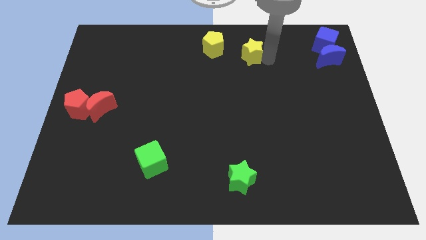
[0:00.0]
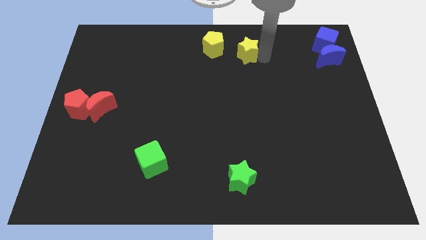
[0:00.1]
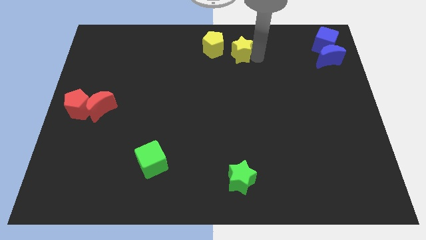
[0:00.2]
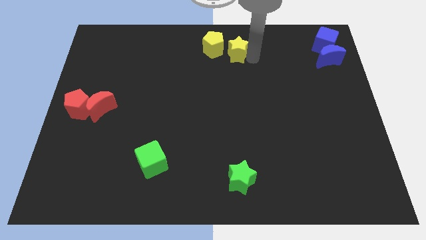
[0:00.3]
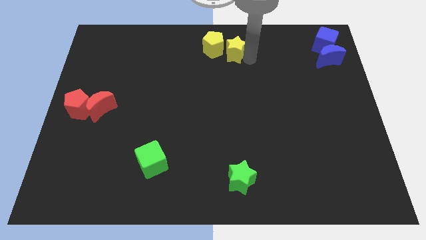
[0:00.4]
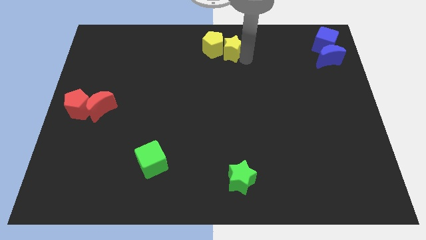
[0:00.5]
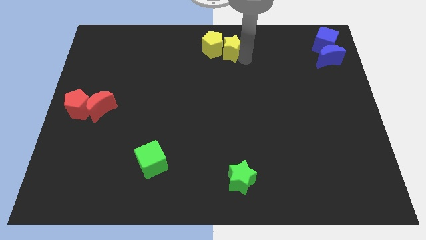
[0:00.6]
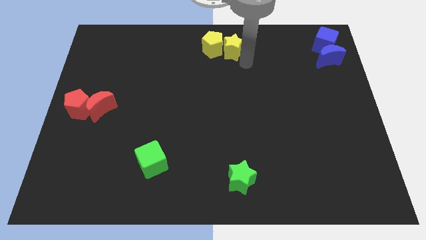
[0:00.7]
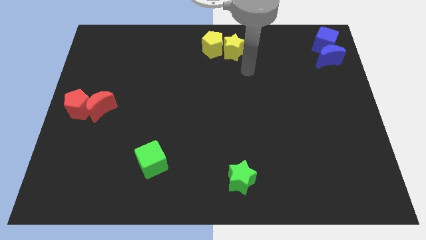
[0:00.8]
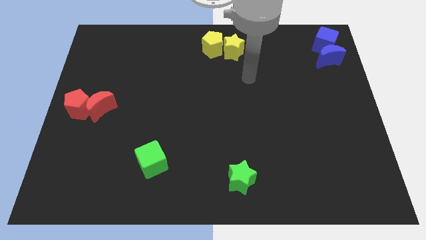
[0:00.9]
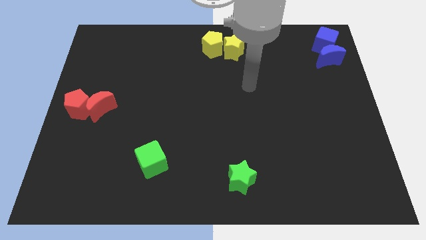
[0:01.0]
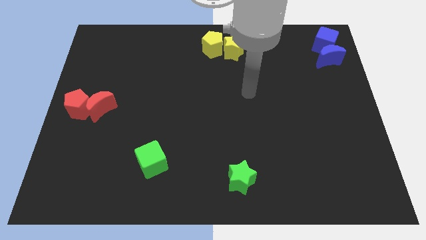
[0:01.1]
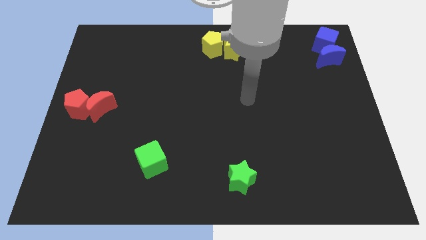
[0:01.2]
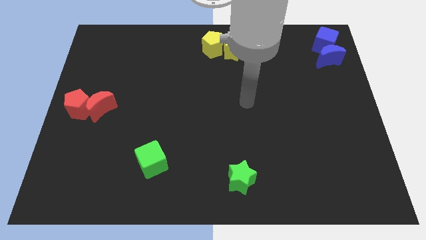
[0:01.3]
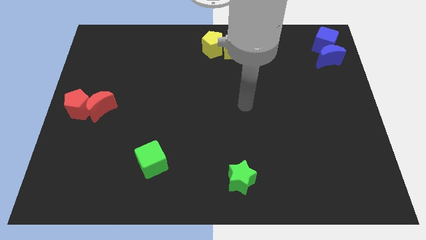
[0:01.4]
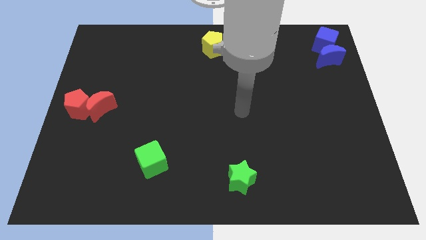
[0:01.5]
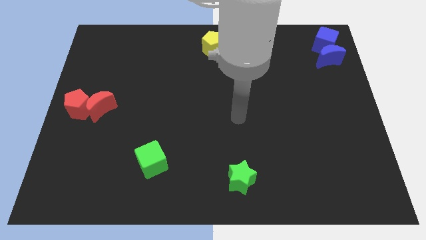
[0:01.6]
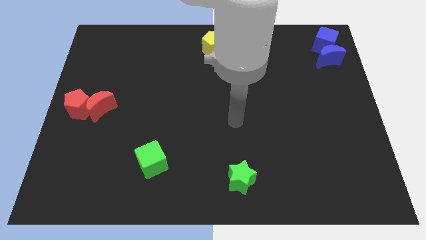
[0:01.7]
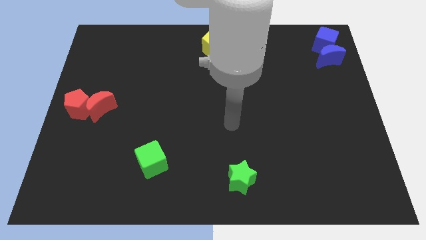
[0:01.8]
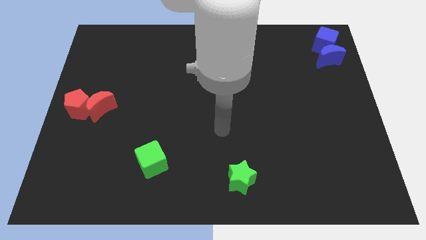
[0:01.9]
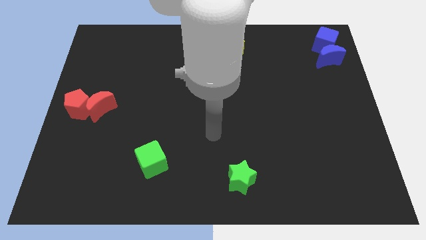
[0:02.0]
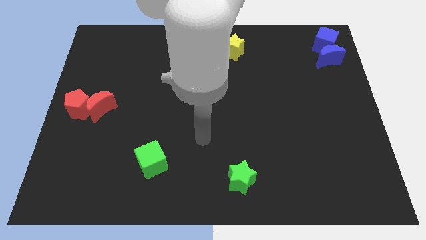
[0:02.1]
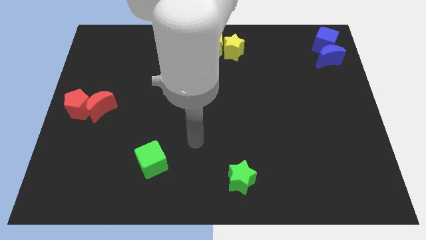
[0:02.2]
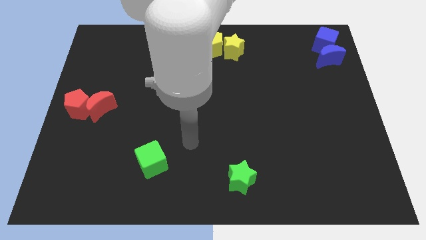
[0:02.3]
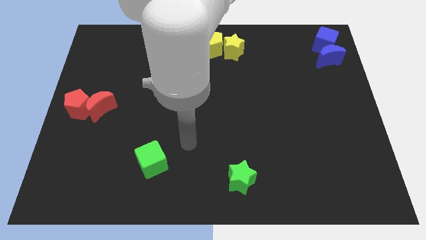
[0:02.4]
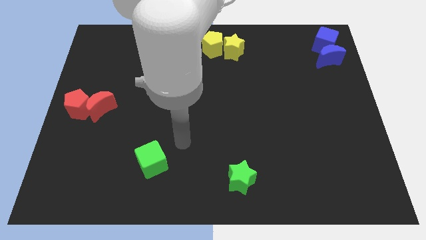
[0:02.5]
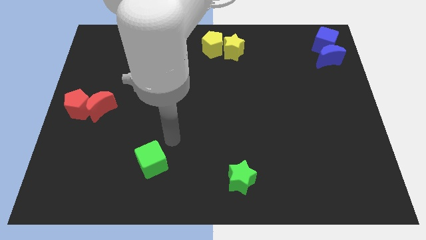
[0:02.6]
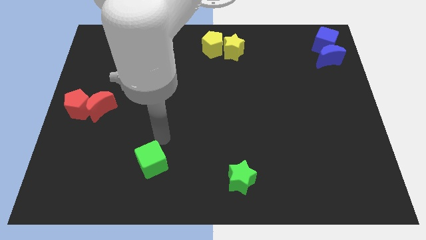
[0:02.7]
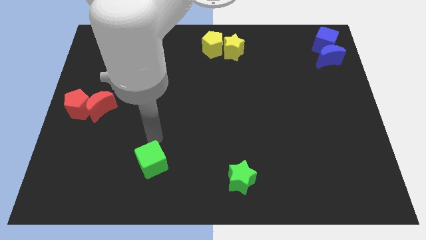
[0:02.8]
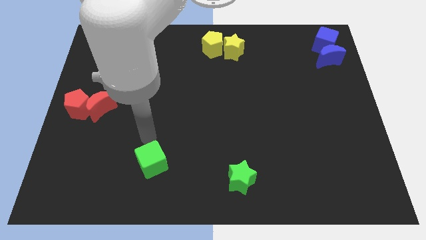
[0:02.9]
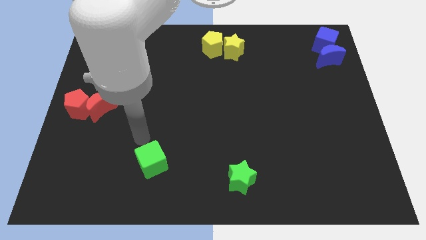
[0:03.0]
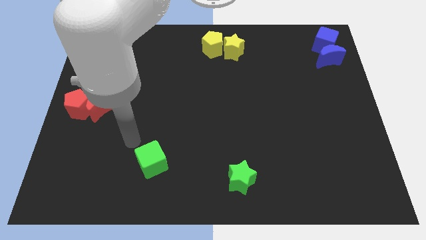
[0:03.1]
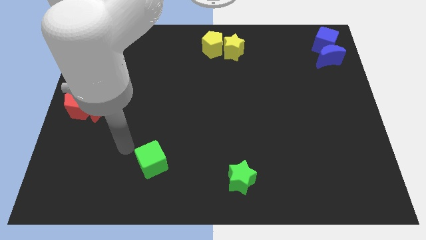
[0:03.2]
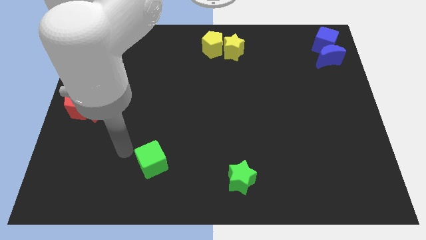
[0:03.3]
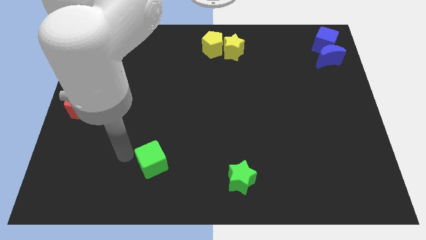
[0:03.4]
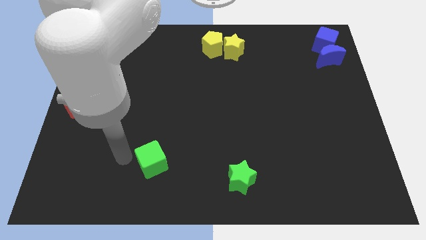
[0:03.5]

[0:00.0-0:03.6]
move your arm away form the yellow star

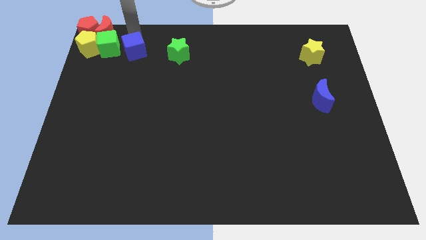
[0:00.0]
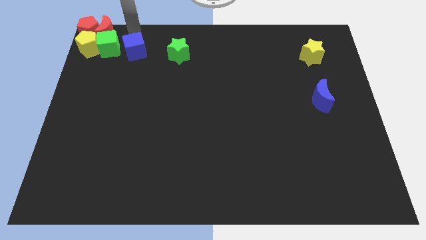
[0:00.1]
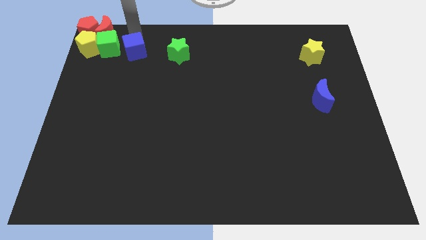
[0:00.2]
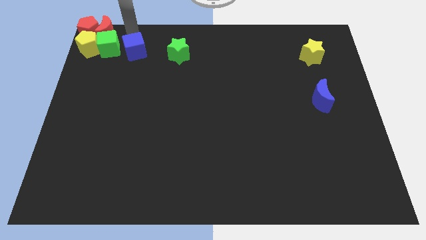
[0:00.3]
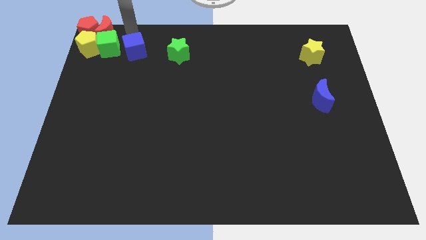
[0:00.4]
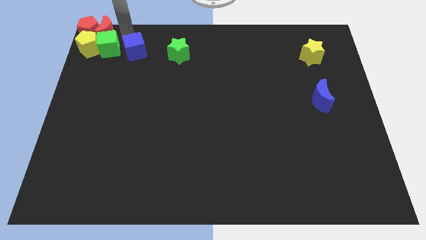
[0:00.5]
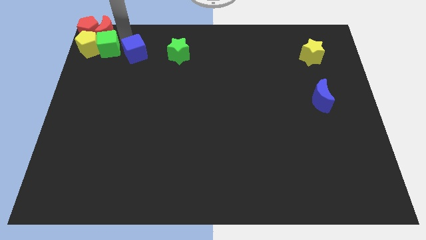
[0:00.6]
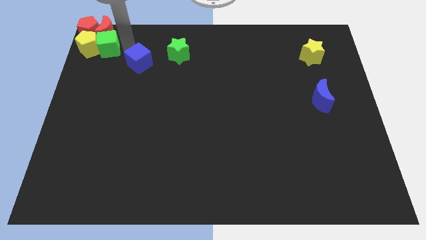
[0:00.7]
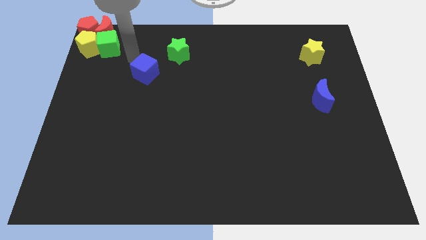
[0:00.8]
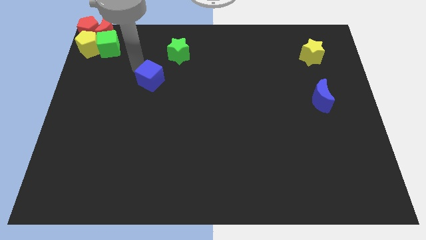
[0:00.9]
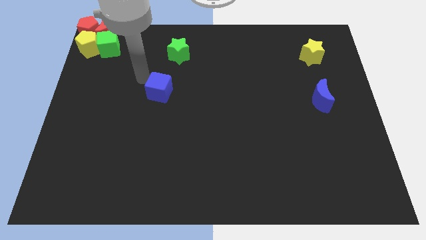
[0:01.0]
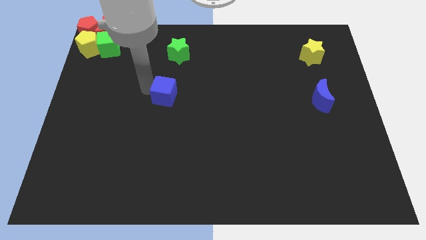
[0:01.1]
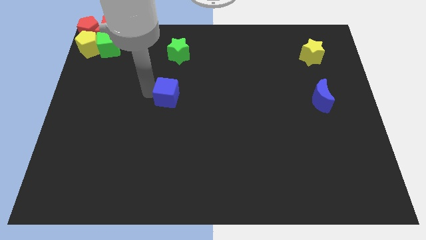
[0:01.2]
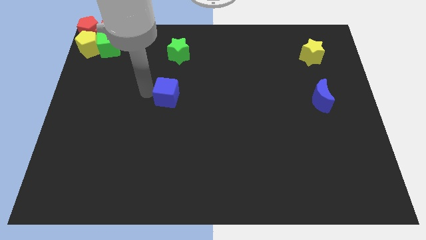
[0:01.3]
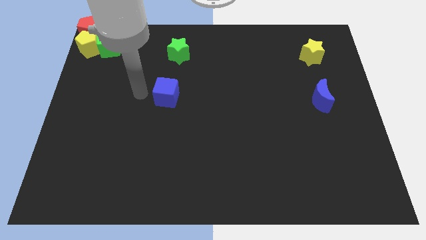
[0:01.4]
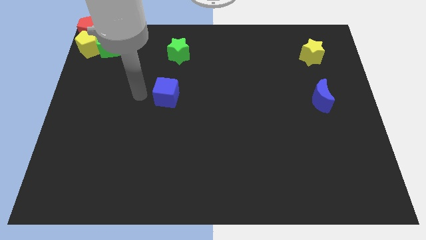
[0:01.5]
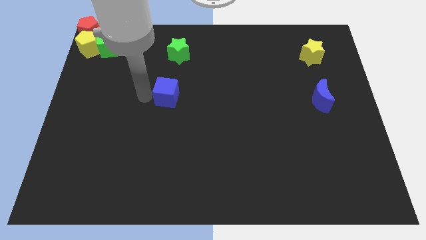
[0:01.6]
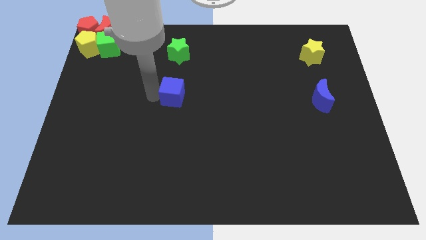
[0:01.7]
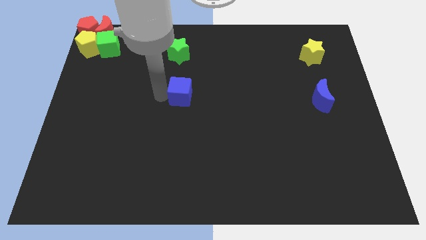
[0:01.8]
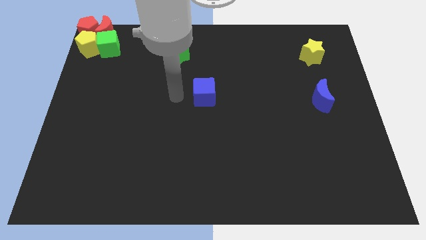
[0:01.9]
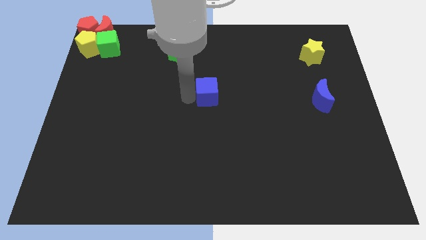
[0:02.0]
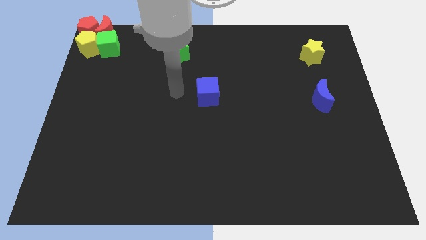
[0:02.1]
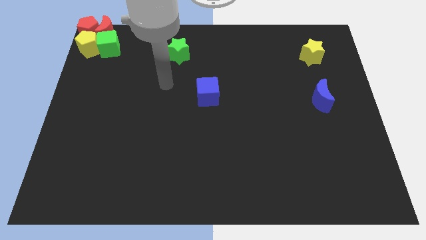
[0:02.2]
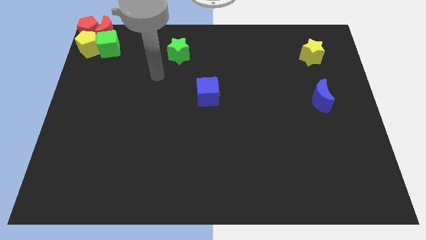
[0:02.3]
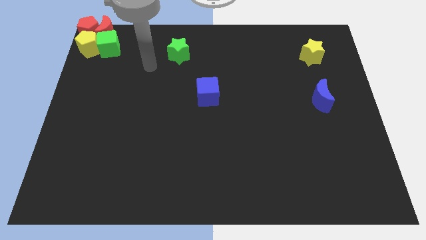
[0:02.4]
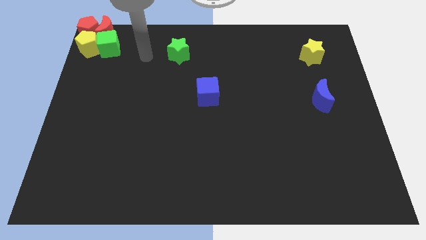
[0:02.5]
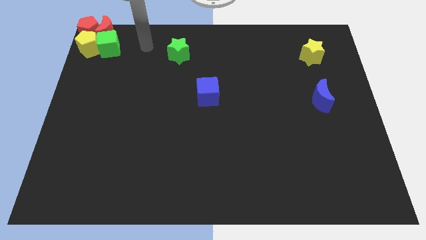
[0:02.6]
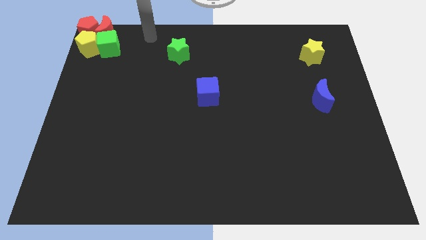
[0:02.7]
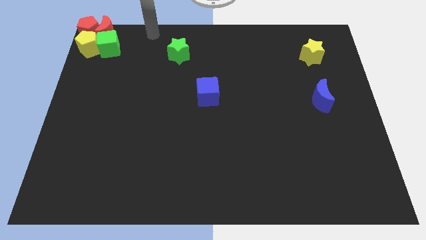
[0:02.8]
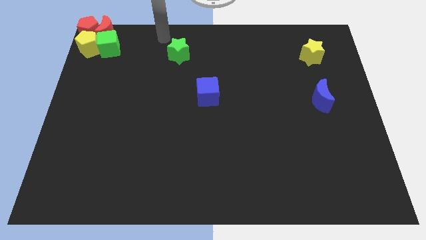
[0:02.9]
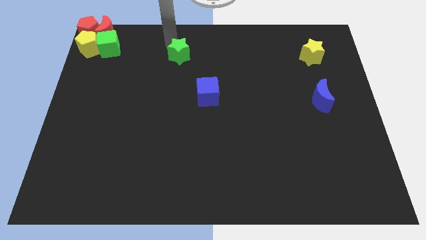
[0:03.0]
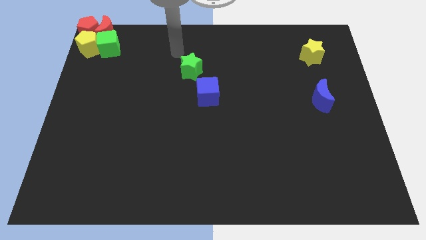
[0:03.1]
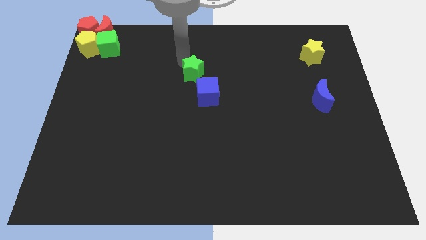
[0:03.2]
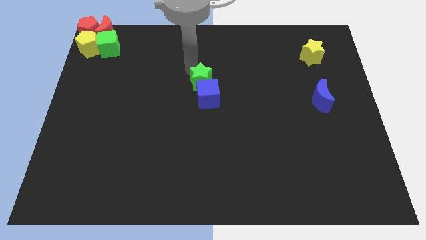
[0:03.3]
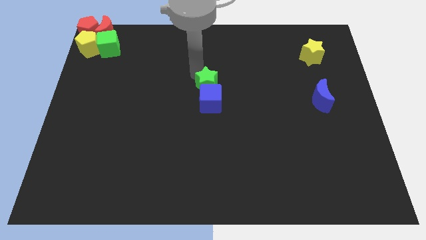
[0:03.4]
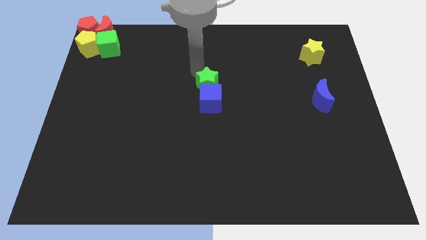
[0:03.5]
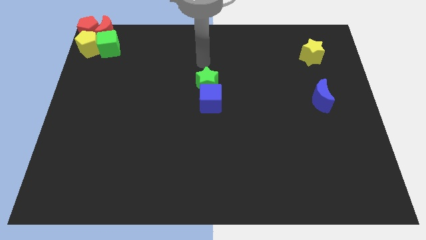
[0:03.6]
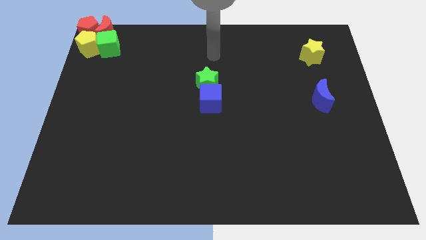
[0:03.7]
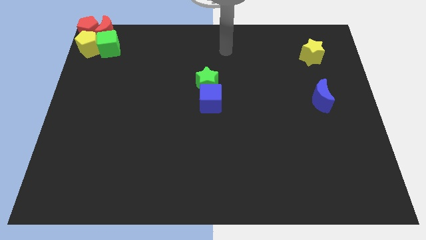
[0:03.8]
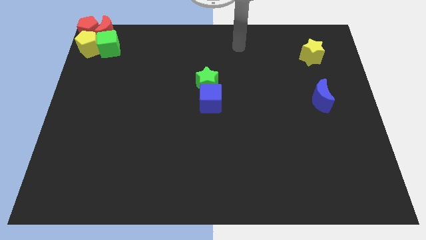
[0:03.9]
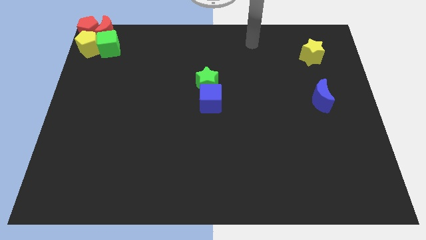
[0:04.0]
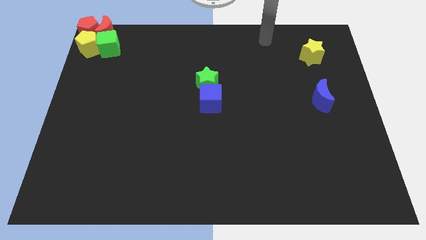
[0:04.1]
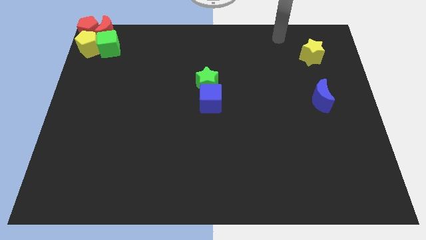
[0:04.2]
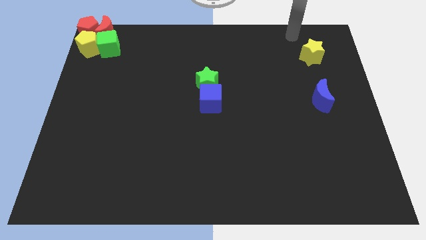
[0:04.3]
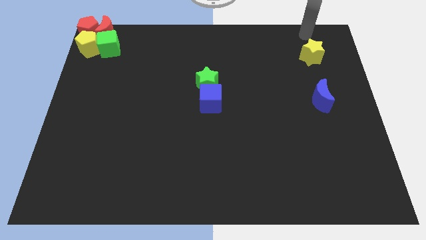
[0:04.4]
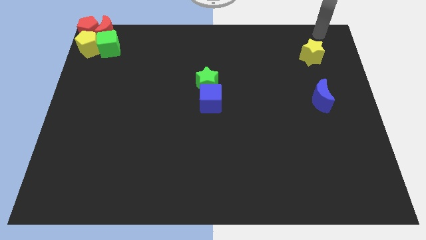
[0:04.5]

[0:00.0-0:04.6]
push the green star into the blue cube

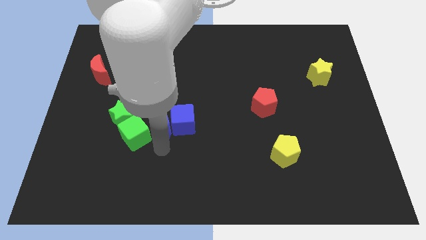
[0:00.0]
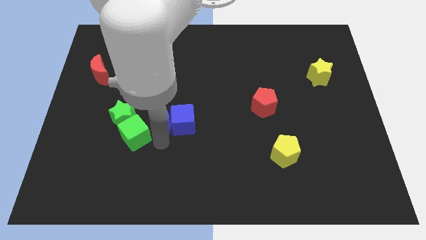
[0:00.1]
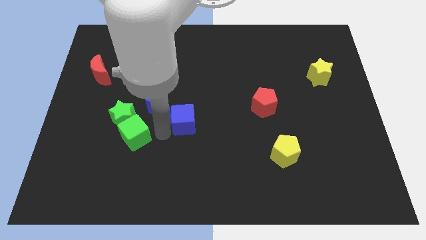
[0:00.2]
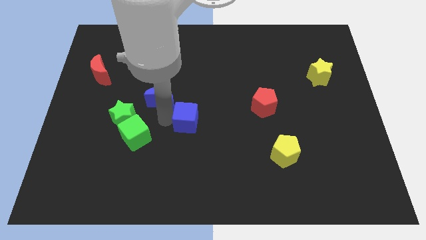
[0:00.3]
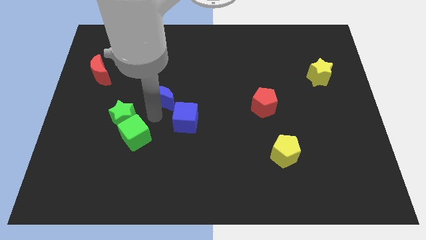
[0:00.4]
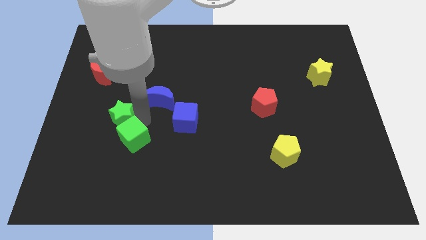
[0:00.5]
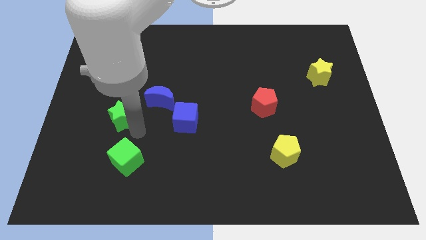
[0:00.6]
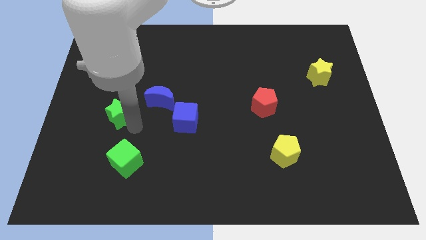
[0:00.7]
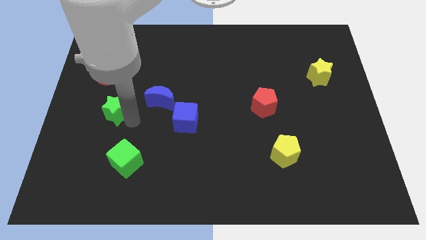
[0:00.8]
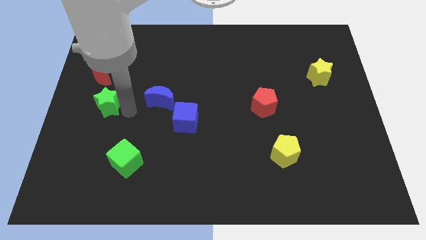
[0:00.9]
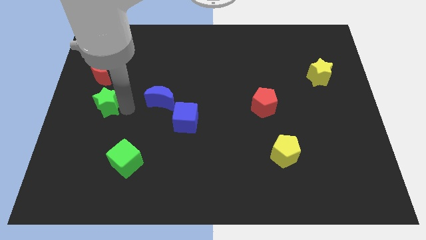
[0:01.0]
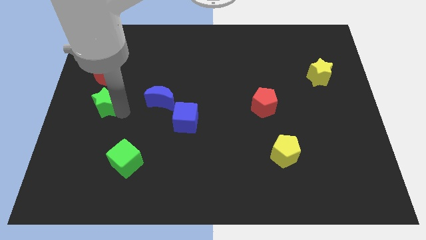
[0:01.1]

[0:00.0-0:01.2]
separate green star from green cube
